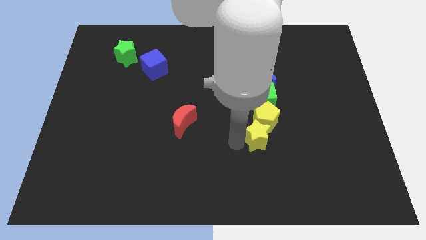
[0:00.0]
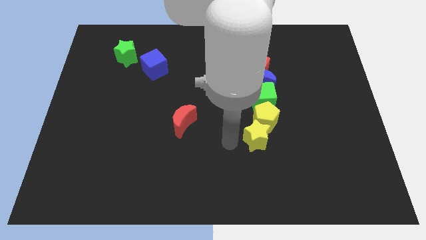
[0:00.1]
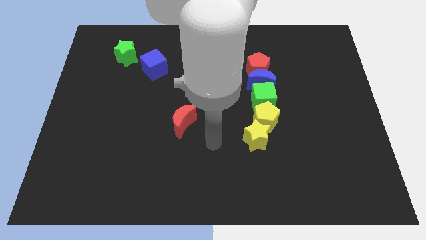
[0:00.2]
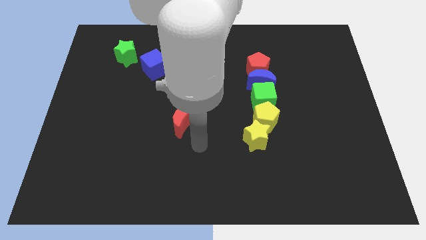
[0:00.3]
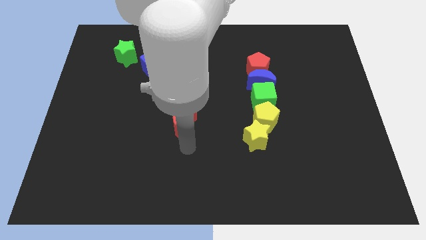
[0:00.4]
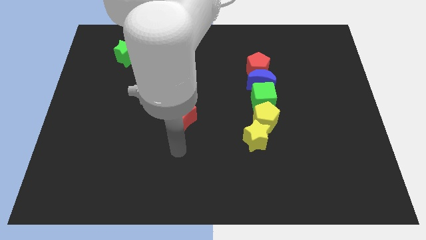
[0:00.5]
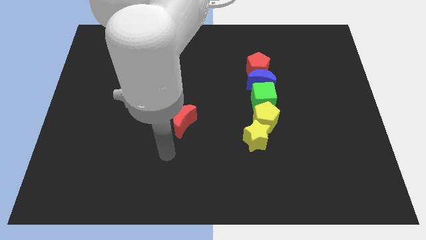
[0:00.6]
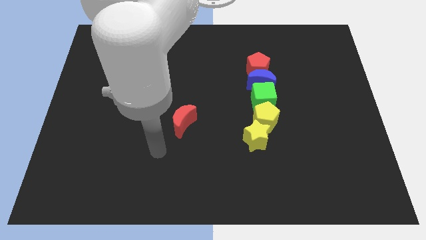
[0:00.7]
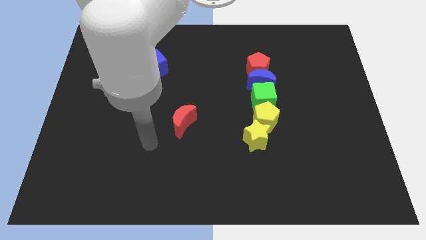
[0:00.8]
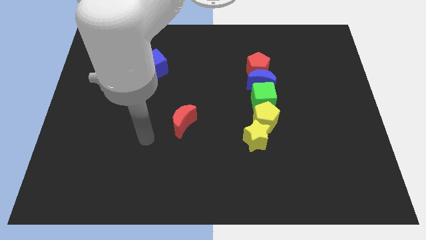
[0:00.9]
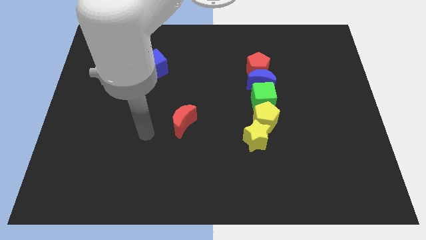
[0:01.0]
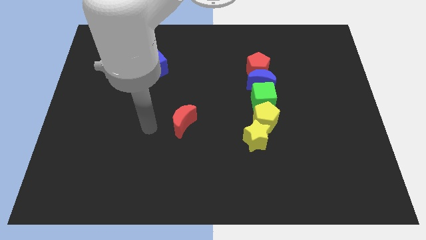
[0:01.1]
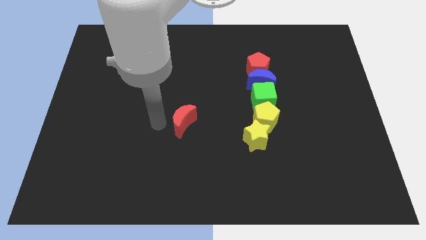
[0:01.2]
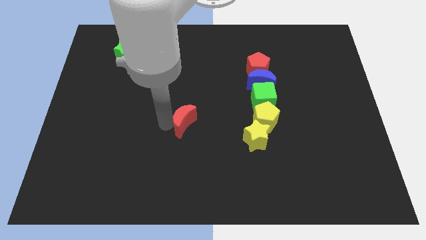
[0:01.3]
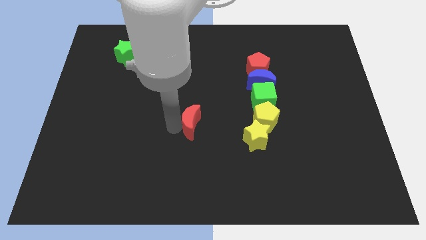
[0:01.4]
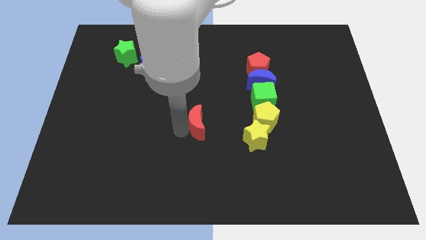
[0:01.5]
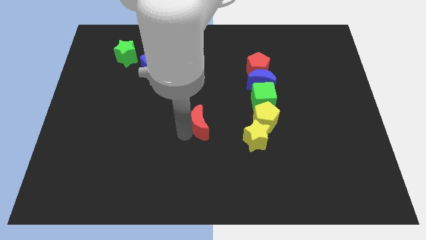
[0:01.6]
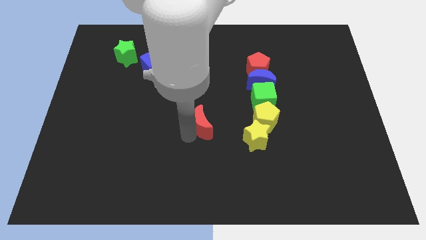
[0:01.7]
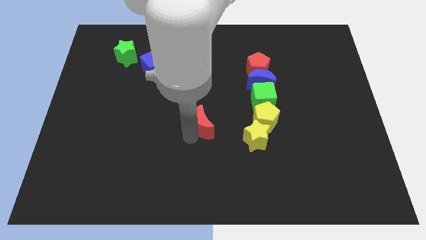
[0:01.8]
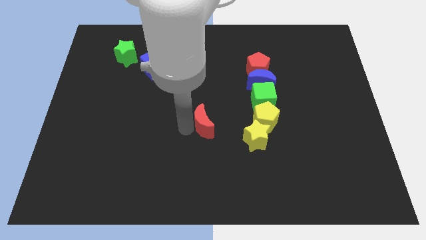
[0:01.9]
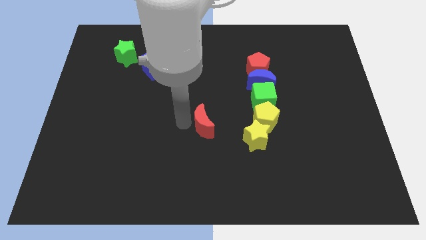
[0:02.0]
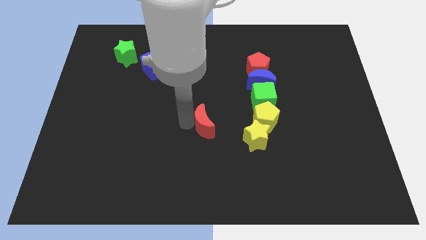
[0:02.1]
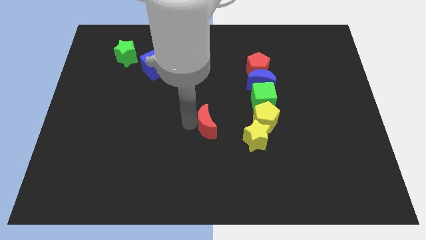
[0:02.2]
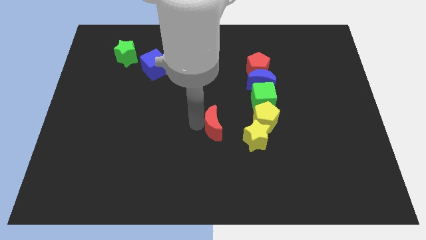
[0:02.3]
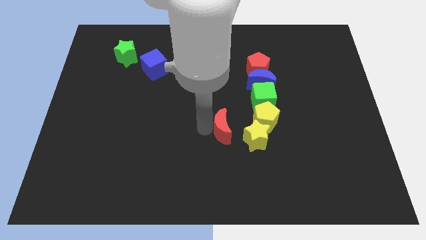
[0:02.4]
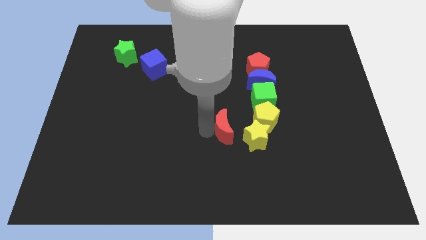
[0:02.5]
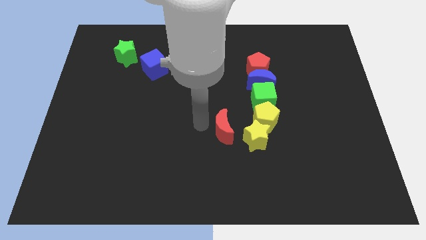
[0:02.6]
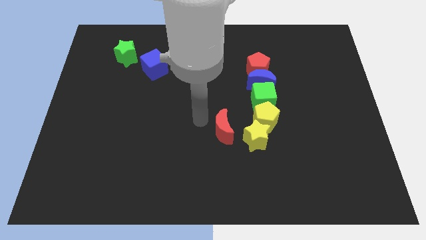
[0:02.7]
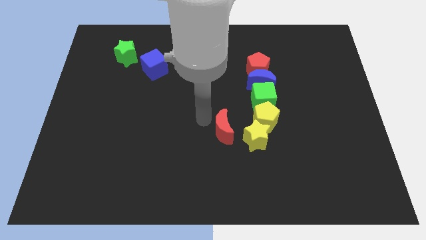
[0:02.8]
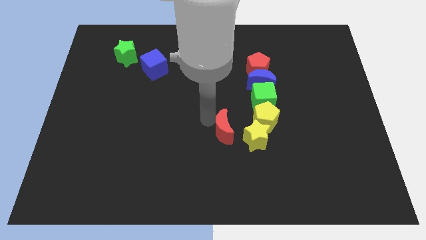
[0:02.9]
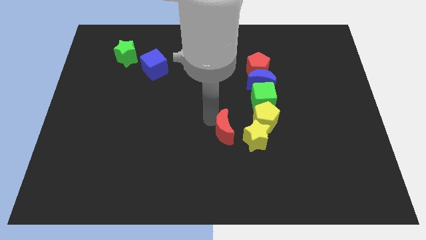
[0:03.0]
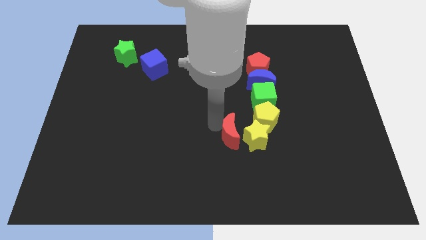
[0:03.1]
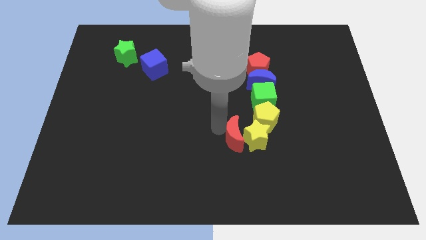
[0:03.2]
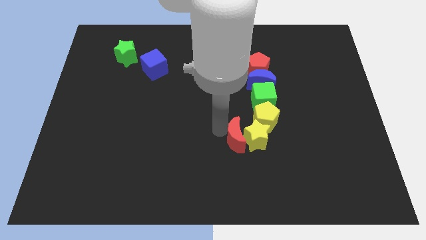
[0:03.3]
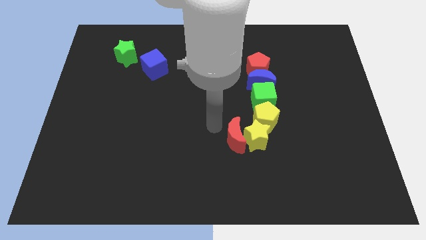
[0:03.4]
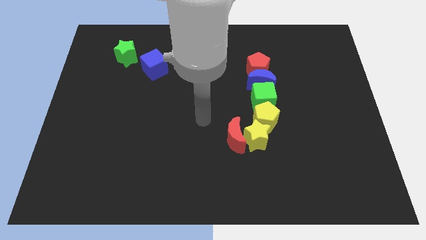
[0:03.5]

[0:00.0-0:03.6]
slide the red crescent into the left side of the yellow star

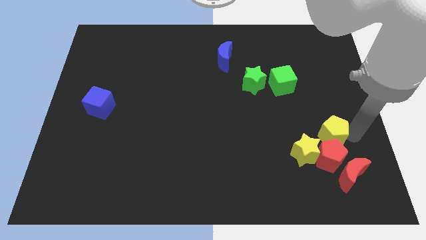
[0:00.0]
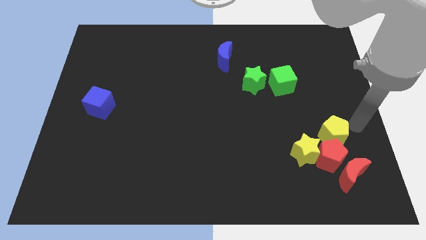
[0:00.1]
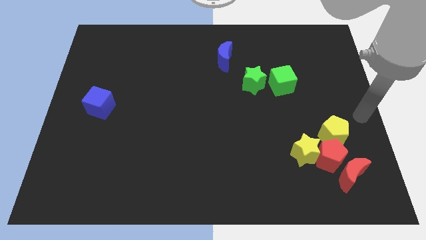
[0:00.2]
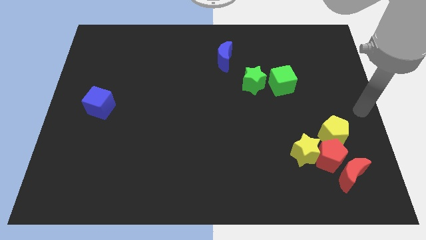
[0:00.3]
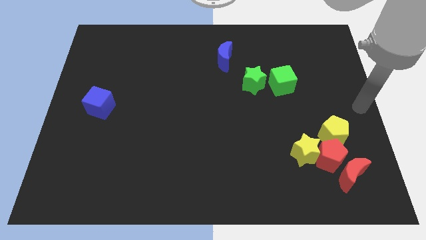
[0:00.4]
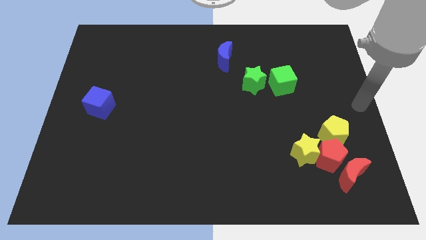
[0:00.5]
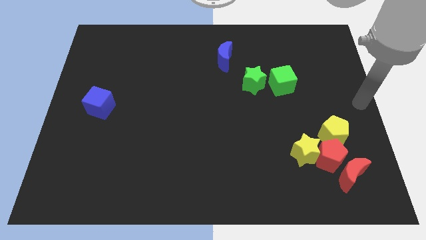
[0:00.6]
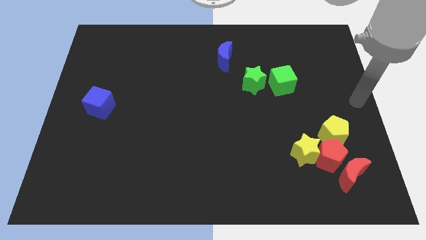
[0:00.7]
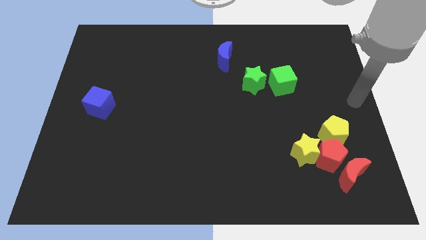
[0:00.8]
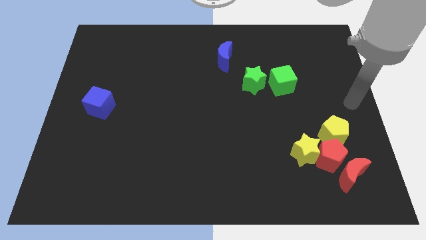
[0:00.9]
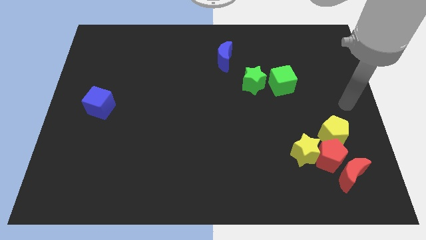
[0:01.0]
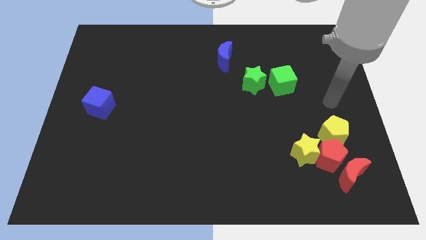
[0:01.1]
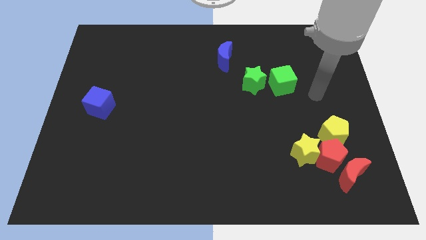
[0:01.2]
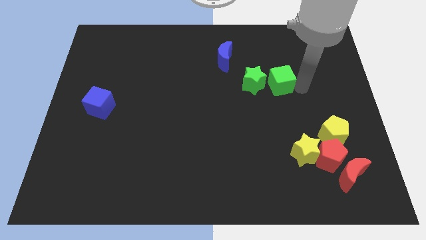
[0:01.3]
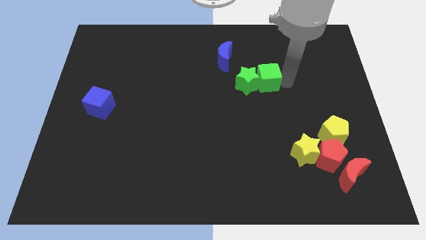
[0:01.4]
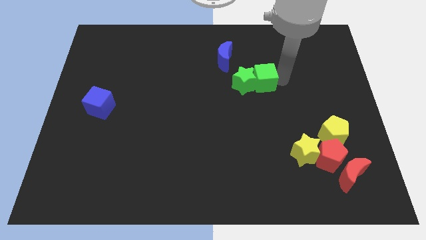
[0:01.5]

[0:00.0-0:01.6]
drag the green cube into the green star

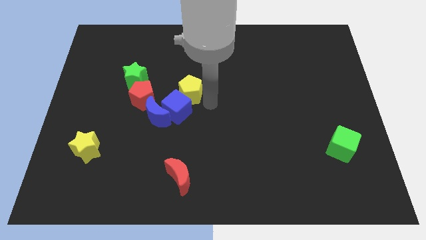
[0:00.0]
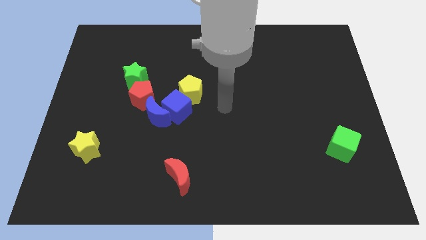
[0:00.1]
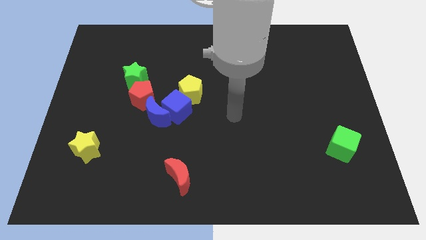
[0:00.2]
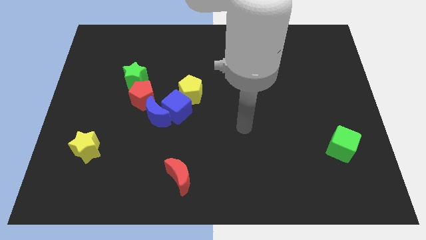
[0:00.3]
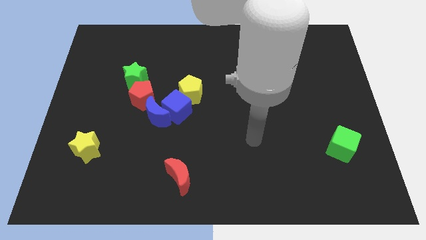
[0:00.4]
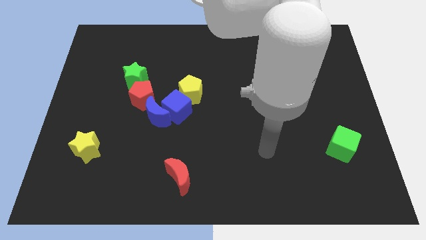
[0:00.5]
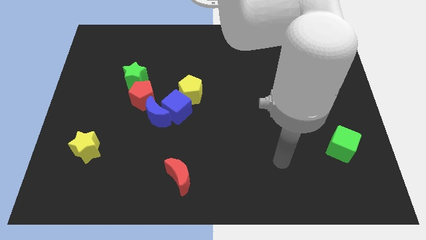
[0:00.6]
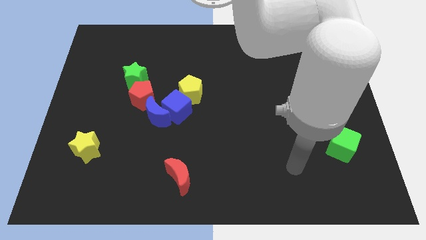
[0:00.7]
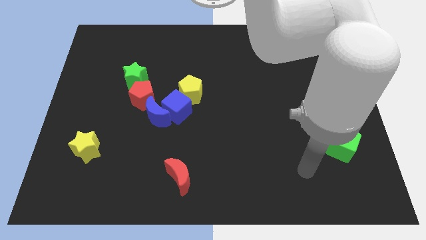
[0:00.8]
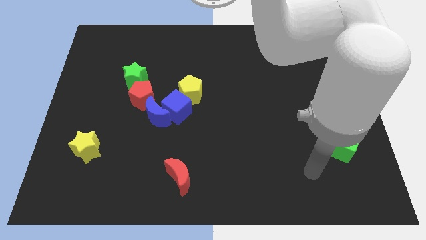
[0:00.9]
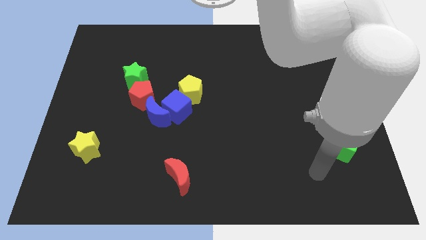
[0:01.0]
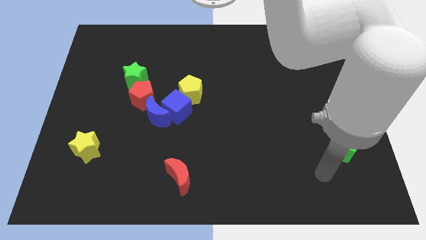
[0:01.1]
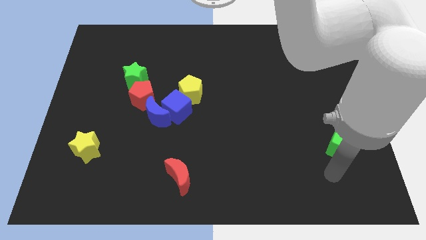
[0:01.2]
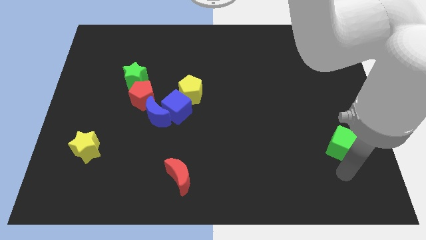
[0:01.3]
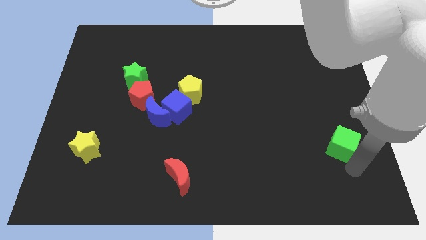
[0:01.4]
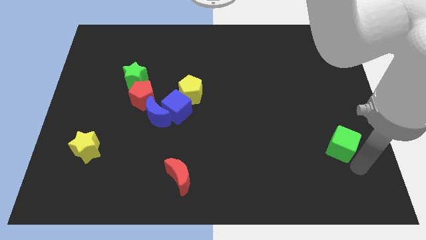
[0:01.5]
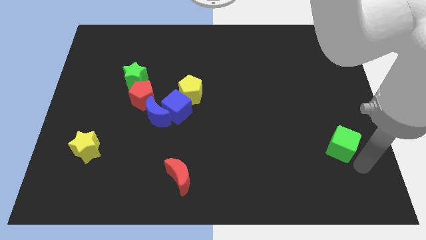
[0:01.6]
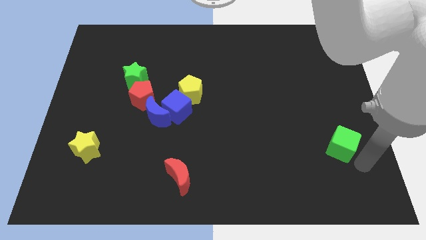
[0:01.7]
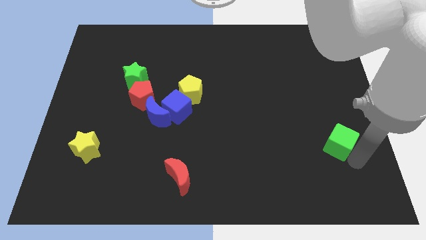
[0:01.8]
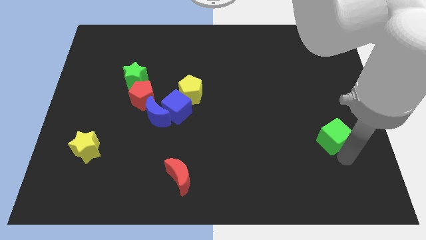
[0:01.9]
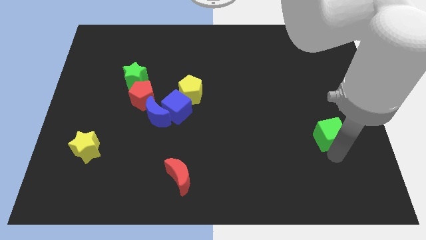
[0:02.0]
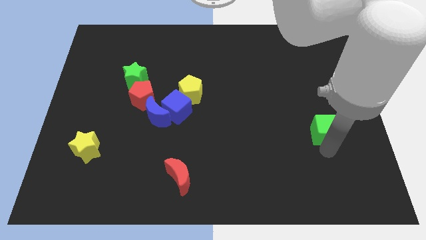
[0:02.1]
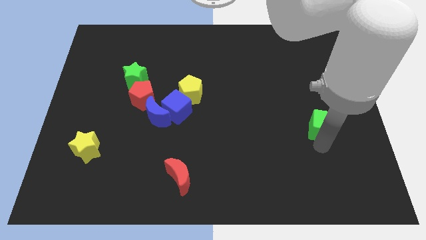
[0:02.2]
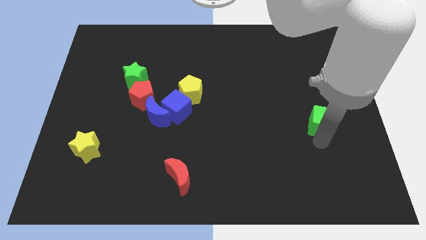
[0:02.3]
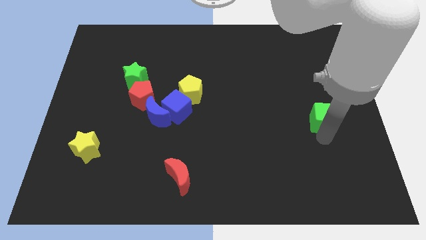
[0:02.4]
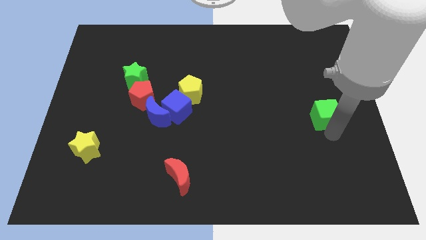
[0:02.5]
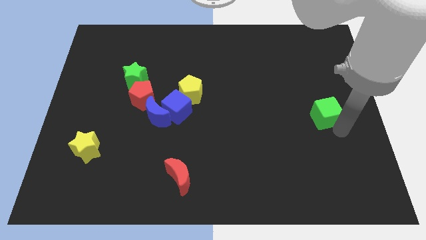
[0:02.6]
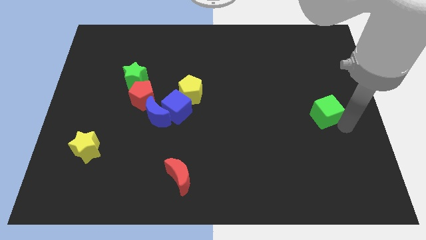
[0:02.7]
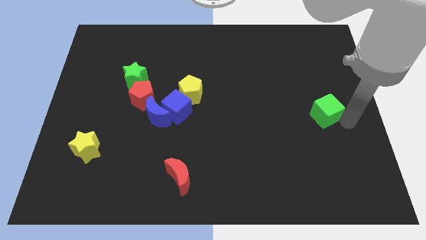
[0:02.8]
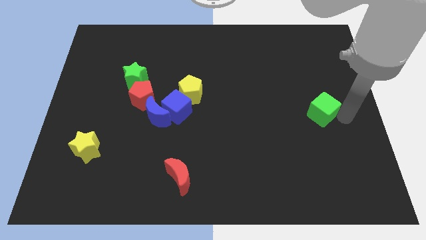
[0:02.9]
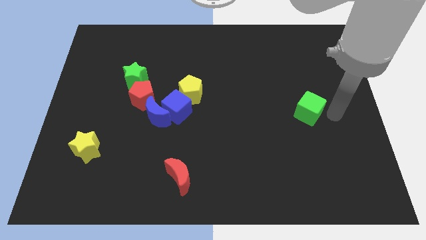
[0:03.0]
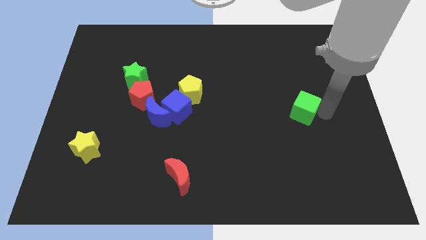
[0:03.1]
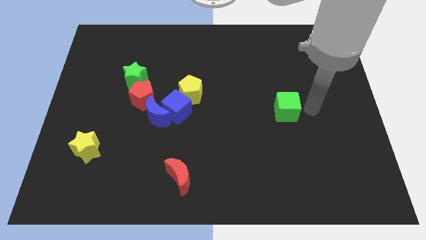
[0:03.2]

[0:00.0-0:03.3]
push the green cube to the right side of the blue cube

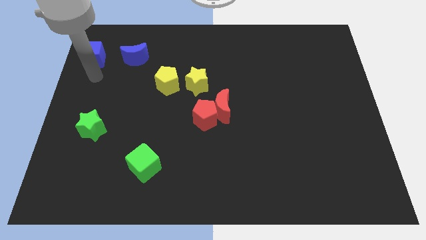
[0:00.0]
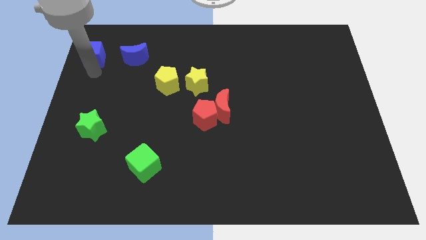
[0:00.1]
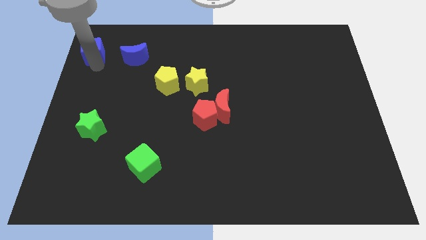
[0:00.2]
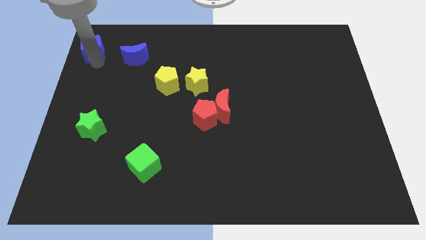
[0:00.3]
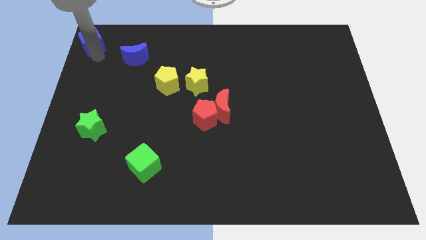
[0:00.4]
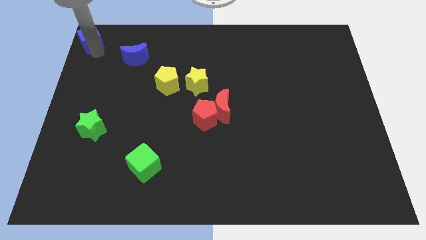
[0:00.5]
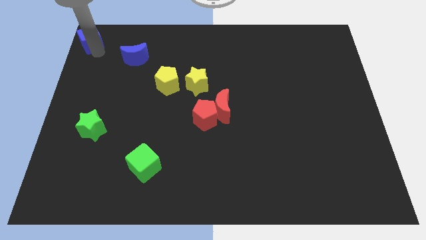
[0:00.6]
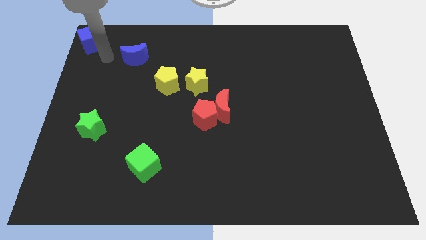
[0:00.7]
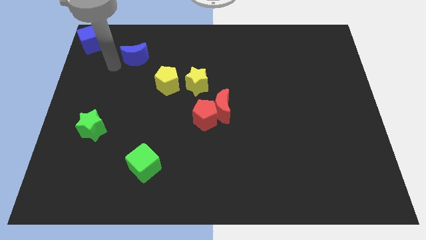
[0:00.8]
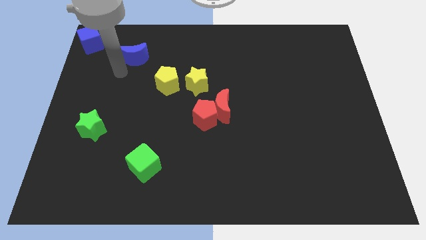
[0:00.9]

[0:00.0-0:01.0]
move the blue cube to the top left corner
